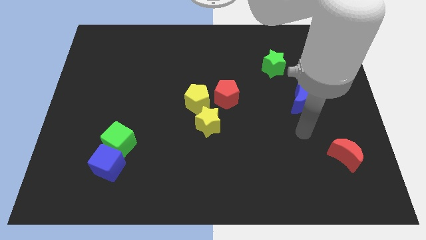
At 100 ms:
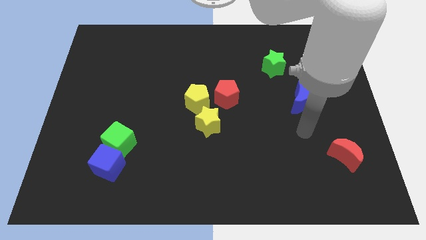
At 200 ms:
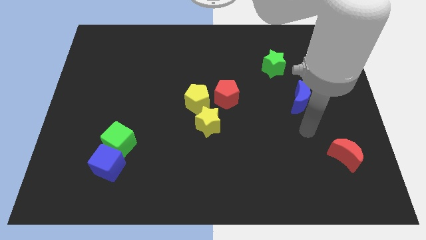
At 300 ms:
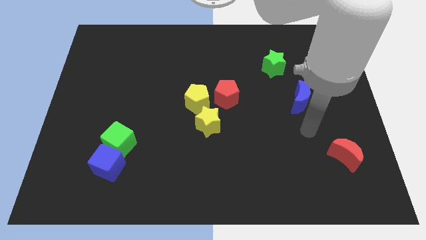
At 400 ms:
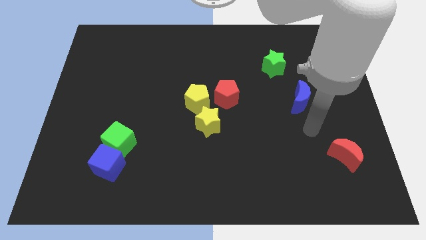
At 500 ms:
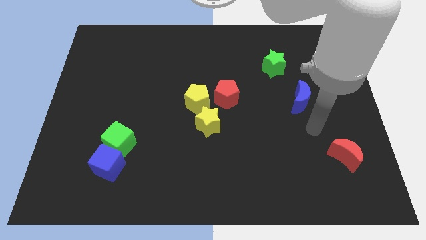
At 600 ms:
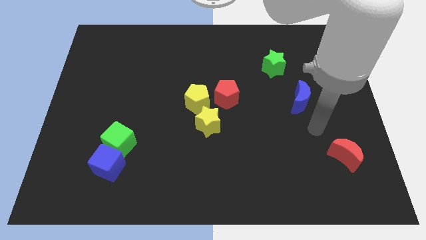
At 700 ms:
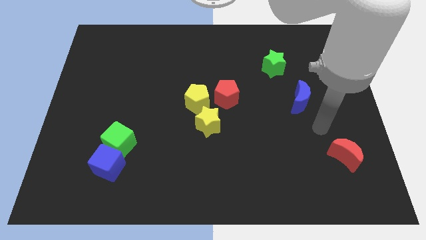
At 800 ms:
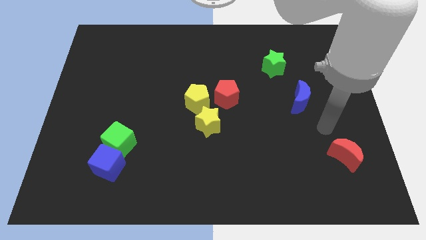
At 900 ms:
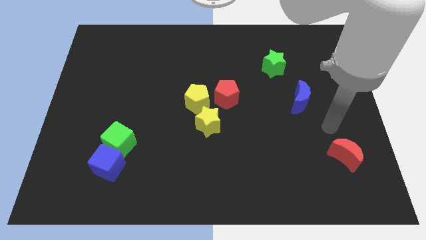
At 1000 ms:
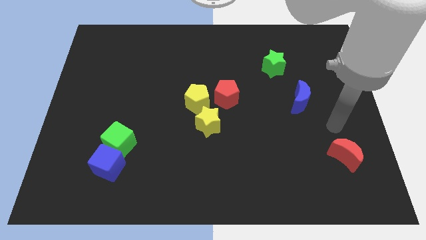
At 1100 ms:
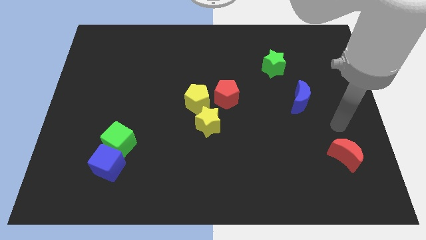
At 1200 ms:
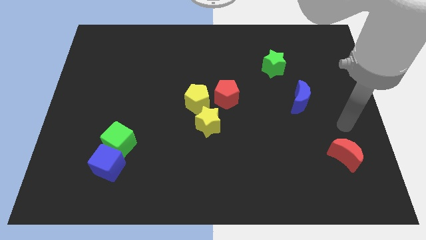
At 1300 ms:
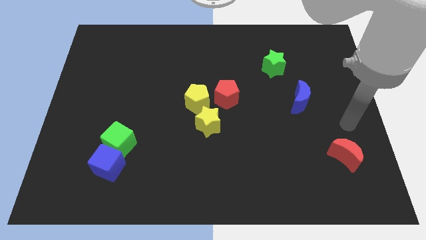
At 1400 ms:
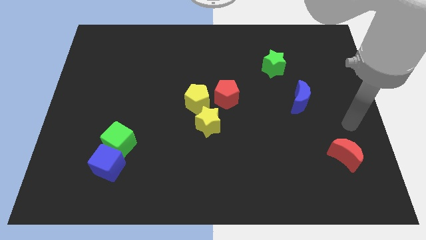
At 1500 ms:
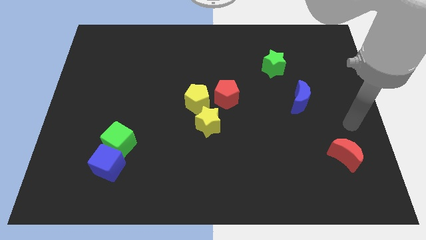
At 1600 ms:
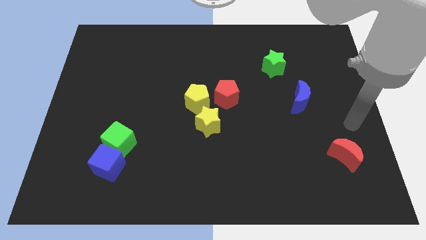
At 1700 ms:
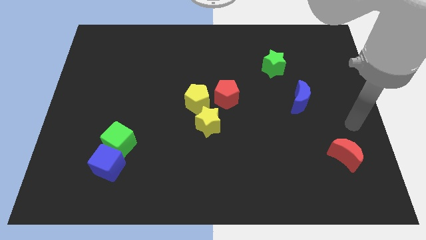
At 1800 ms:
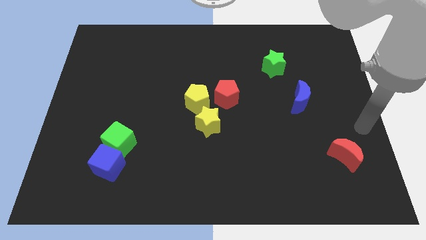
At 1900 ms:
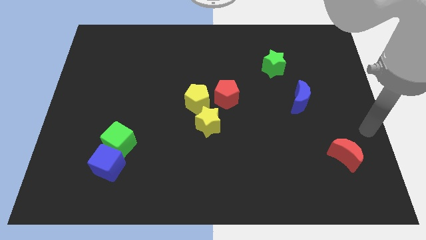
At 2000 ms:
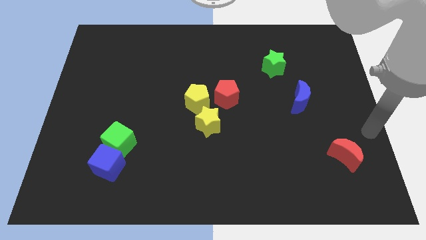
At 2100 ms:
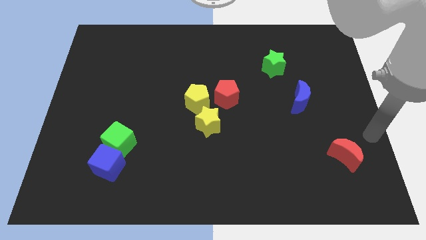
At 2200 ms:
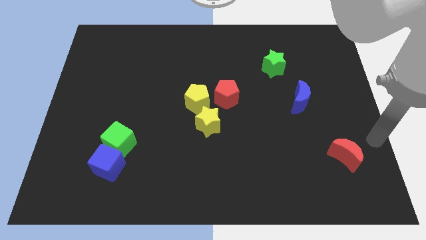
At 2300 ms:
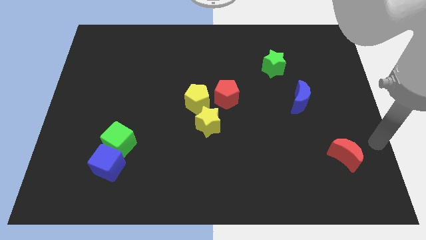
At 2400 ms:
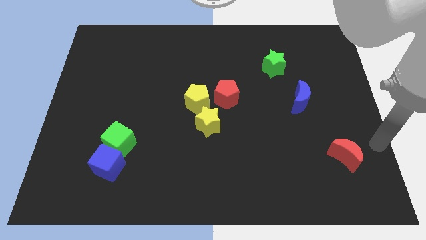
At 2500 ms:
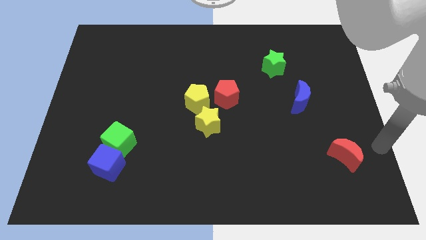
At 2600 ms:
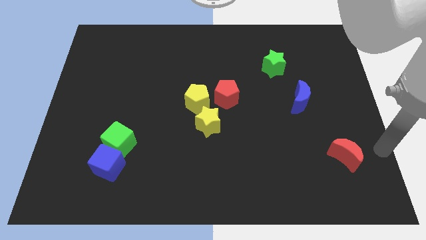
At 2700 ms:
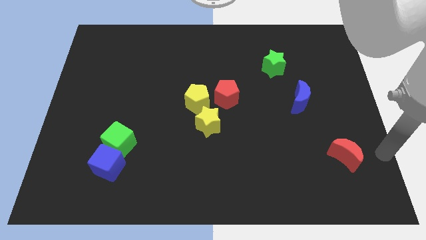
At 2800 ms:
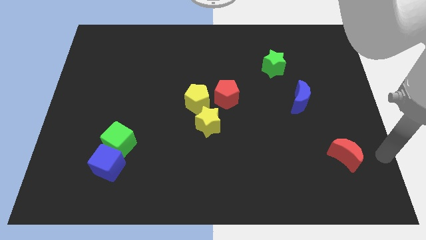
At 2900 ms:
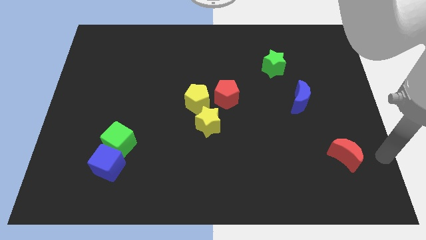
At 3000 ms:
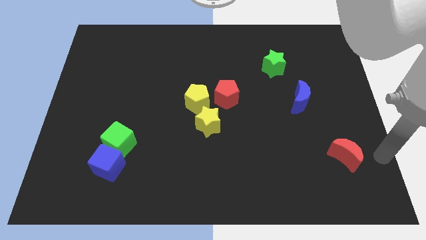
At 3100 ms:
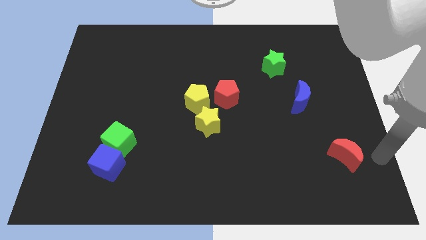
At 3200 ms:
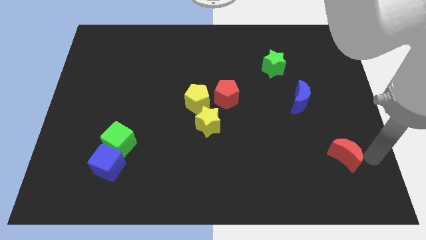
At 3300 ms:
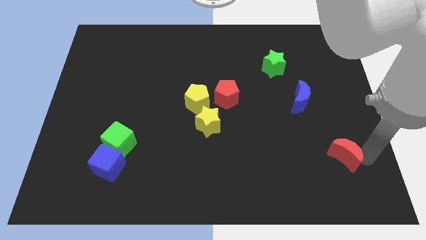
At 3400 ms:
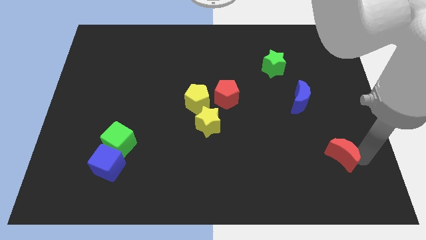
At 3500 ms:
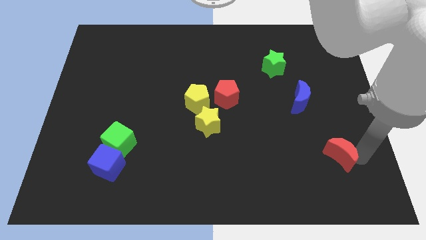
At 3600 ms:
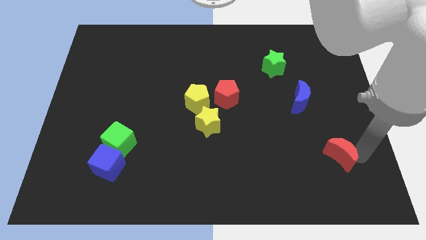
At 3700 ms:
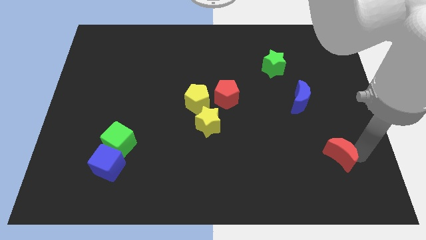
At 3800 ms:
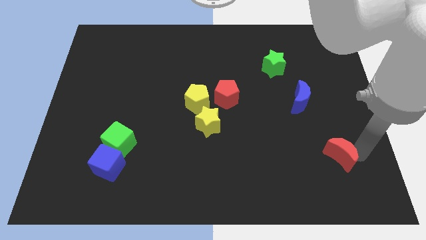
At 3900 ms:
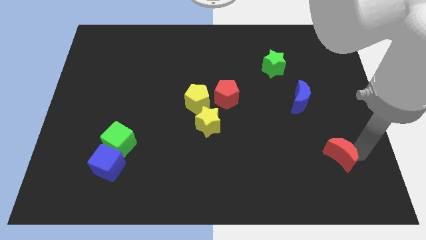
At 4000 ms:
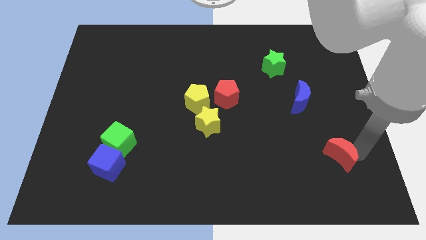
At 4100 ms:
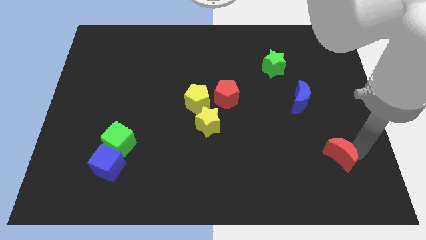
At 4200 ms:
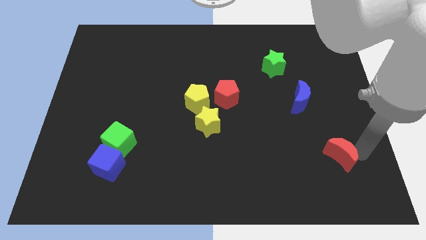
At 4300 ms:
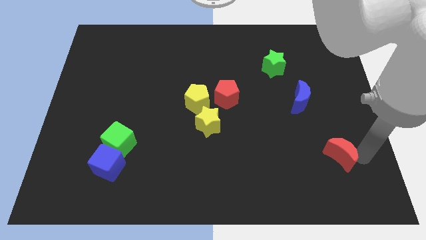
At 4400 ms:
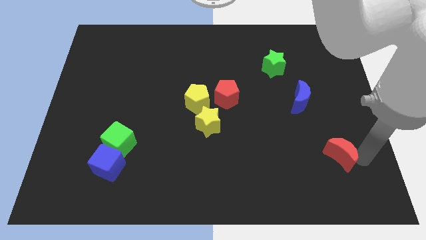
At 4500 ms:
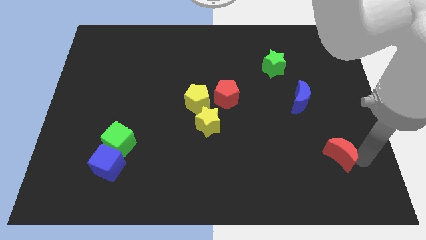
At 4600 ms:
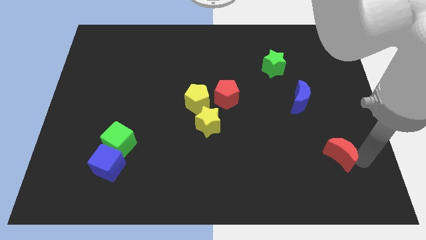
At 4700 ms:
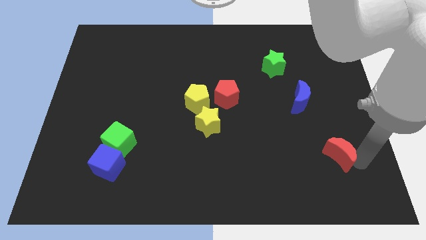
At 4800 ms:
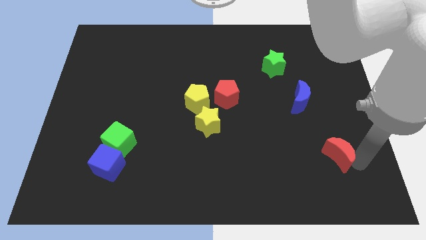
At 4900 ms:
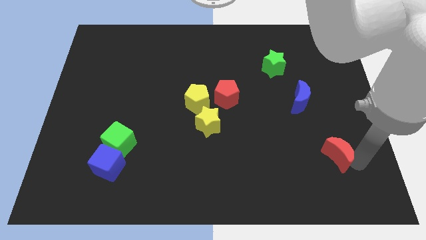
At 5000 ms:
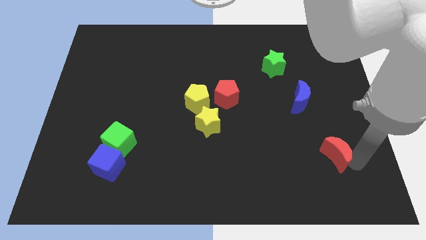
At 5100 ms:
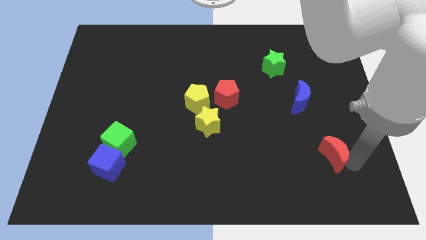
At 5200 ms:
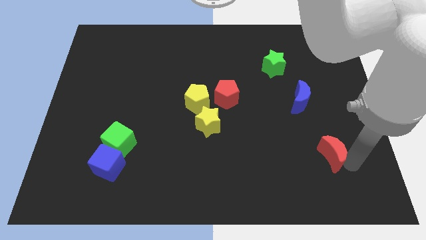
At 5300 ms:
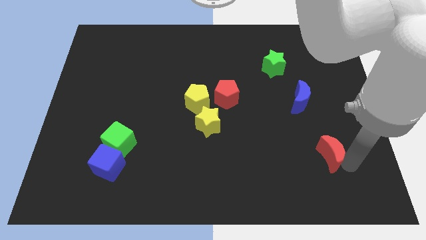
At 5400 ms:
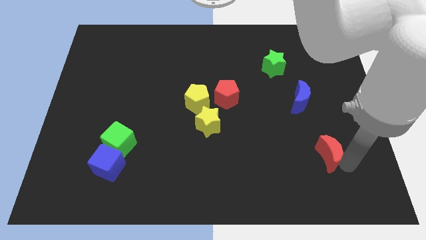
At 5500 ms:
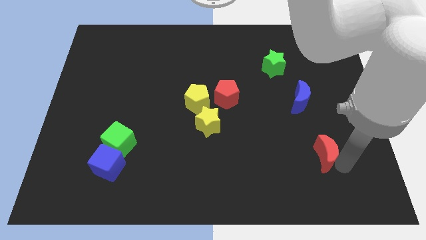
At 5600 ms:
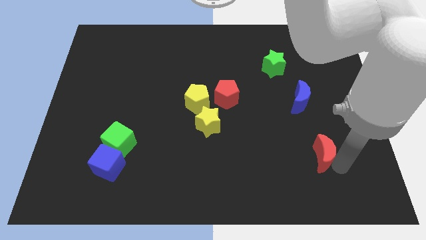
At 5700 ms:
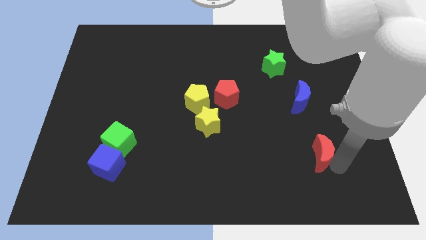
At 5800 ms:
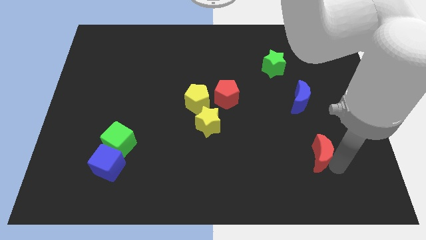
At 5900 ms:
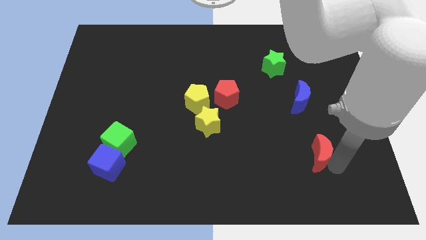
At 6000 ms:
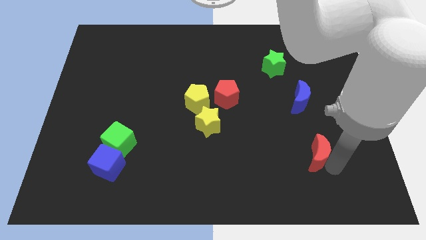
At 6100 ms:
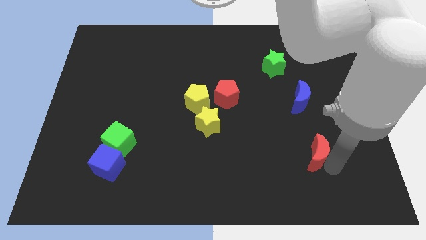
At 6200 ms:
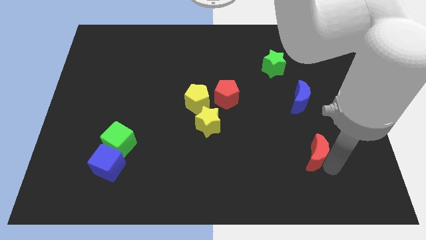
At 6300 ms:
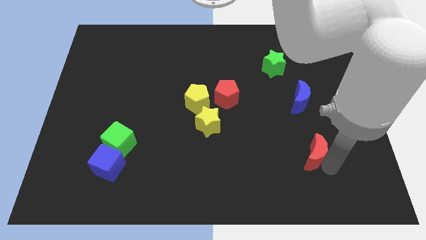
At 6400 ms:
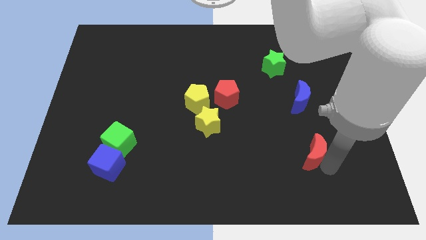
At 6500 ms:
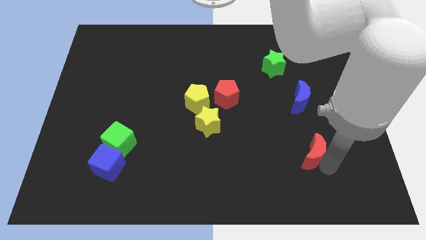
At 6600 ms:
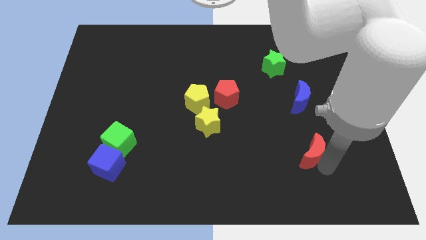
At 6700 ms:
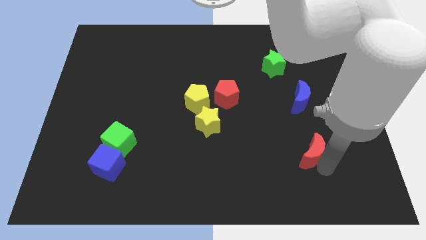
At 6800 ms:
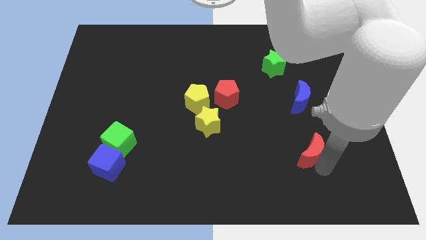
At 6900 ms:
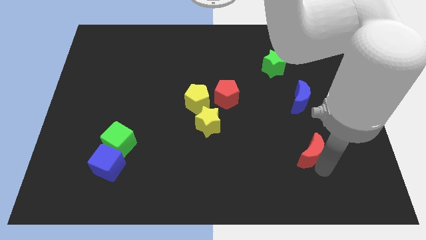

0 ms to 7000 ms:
move the red crescent to the bottom of the blue crescent

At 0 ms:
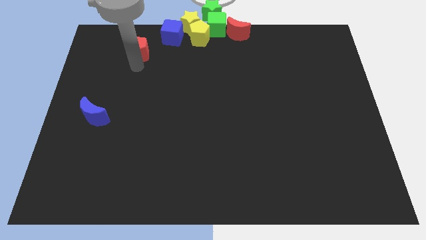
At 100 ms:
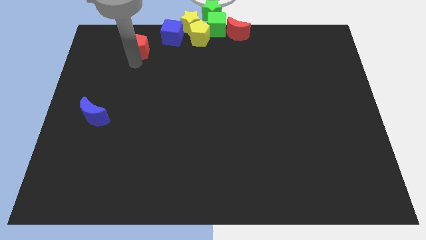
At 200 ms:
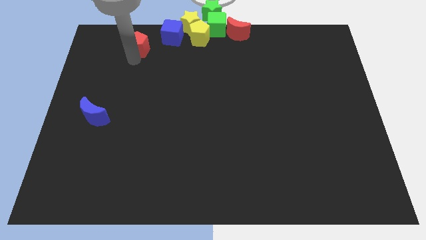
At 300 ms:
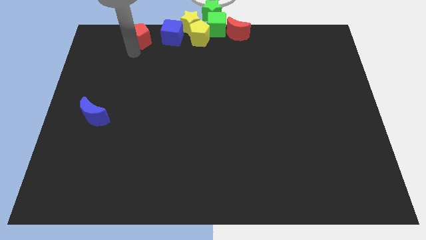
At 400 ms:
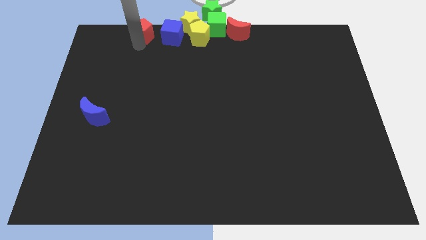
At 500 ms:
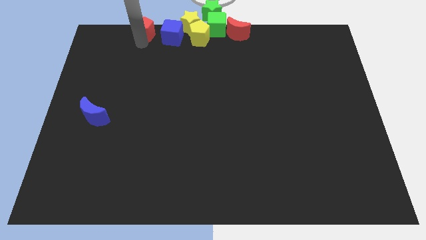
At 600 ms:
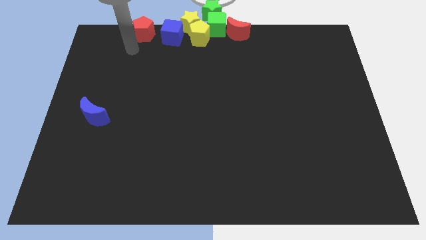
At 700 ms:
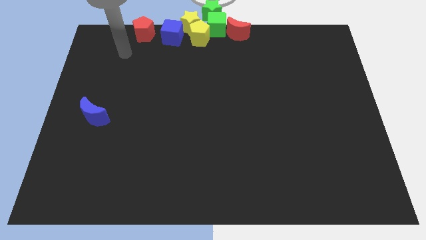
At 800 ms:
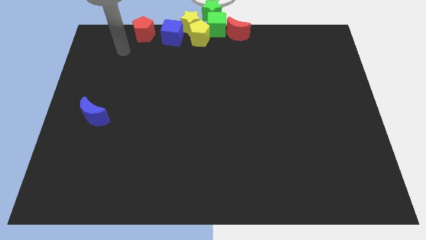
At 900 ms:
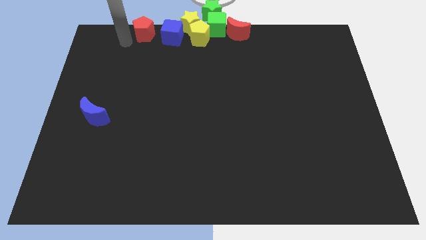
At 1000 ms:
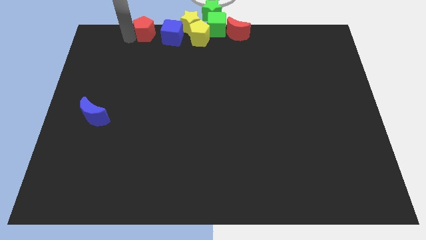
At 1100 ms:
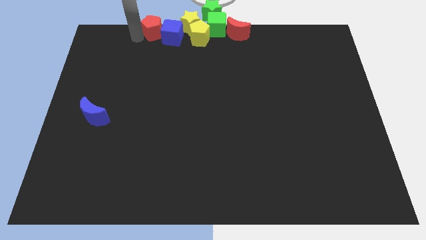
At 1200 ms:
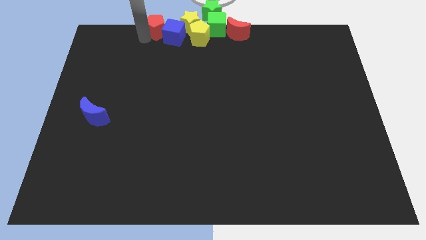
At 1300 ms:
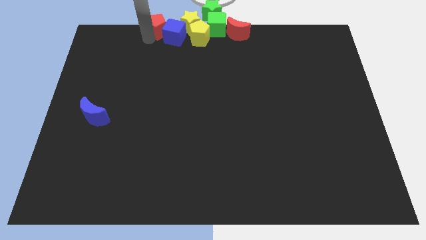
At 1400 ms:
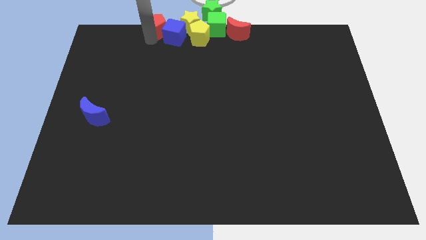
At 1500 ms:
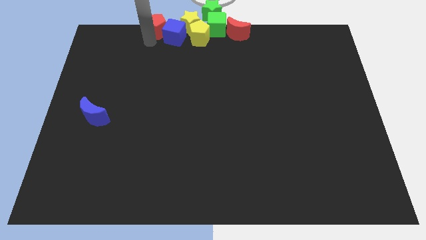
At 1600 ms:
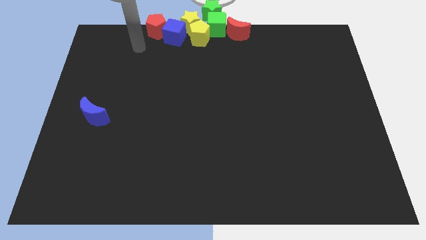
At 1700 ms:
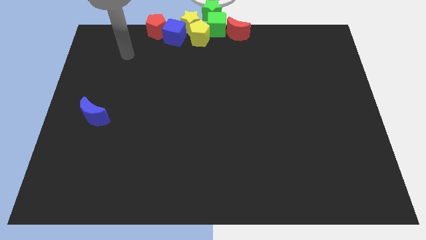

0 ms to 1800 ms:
place red pentagon to the left of blue block

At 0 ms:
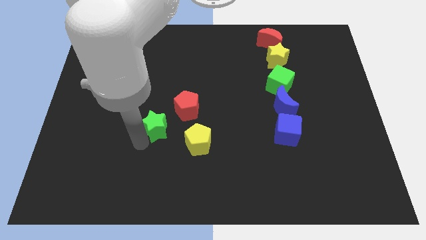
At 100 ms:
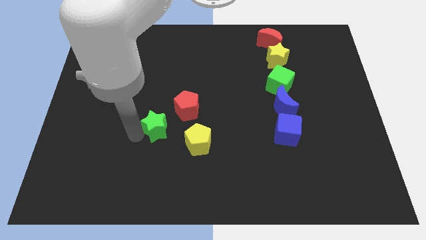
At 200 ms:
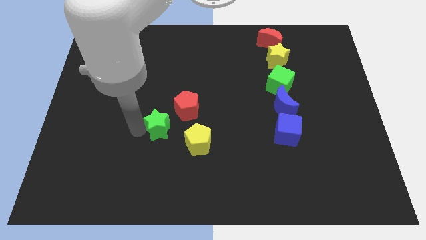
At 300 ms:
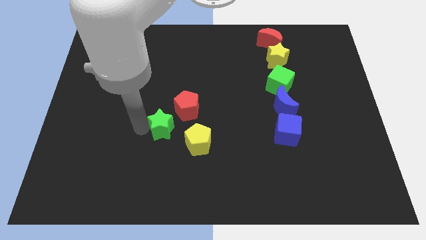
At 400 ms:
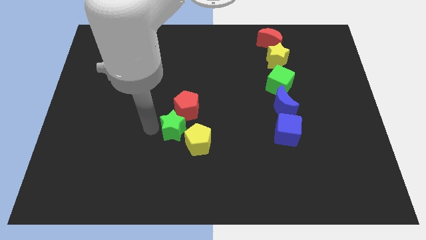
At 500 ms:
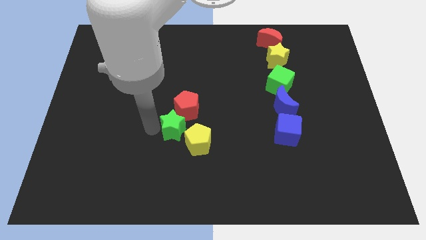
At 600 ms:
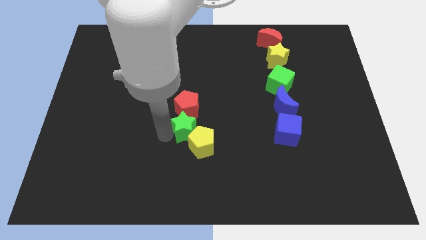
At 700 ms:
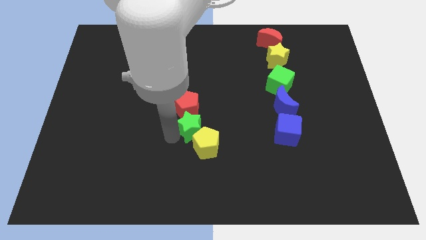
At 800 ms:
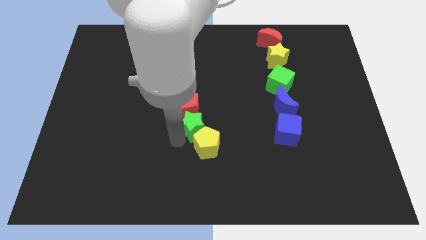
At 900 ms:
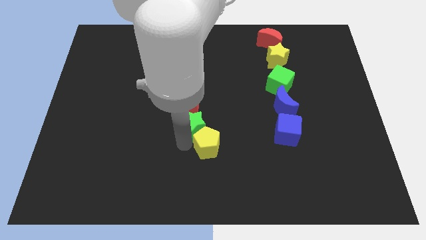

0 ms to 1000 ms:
place the green star in between the yellow pentagon and the red pentagon
